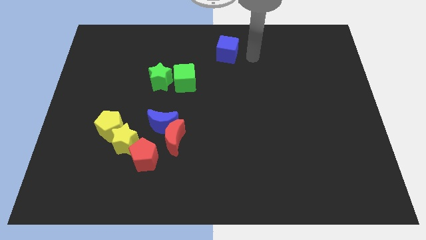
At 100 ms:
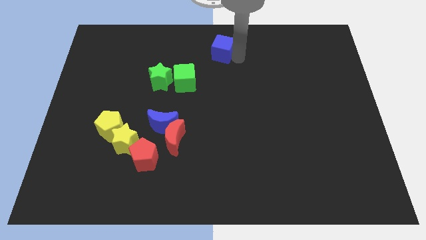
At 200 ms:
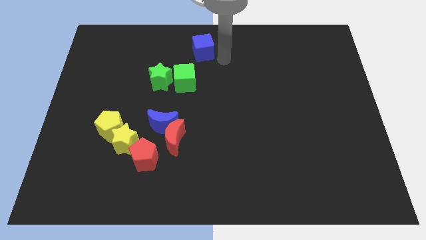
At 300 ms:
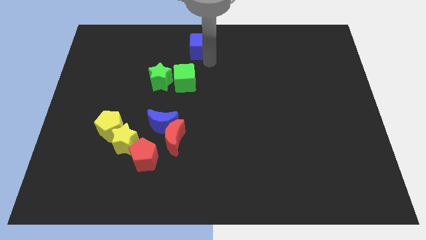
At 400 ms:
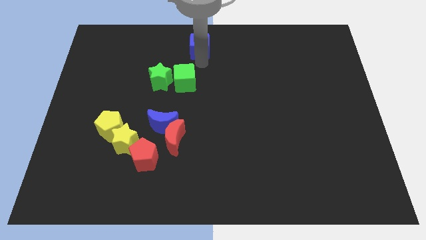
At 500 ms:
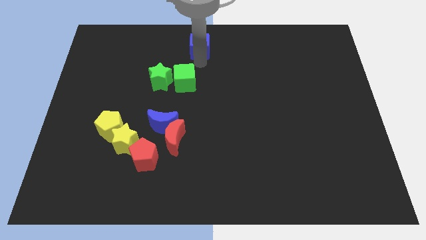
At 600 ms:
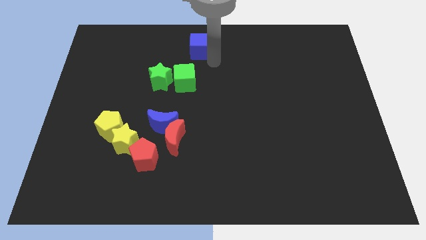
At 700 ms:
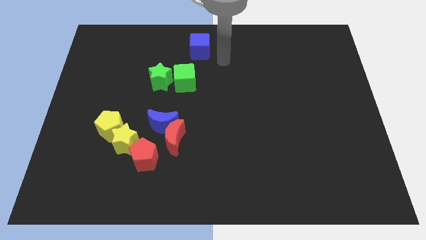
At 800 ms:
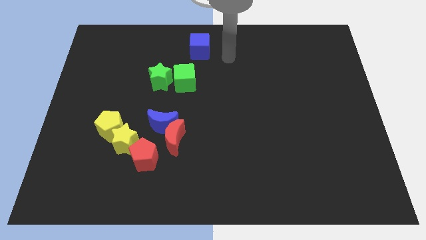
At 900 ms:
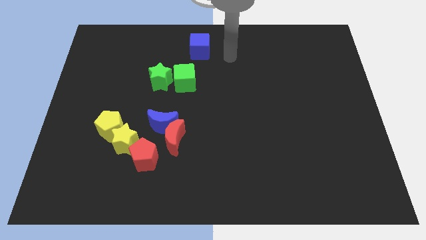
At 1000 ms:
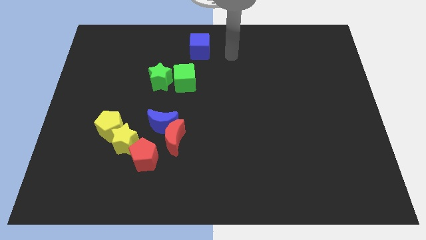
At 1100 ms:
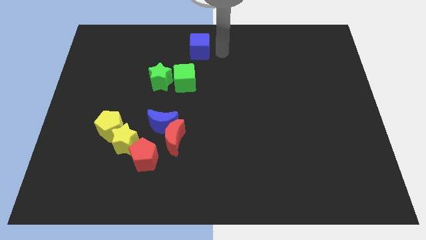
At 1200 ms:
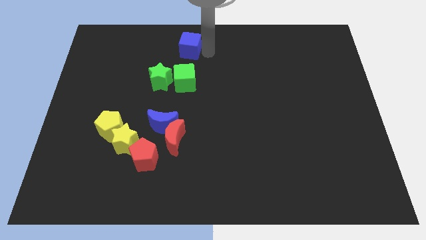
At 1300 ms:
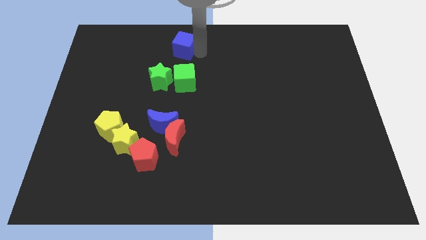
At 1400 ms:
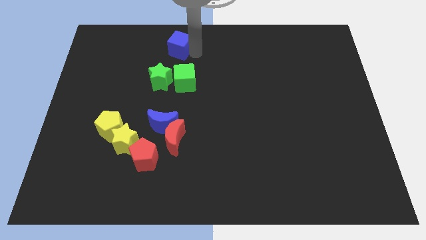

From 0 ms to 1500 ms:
put the blue cube above the green cube

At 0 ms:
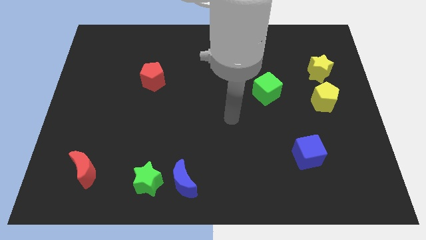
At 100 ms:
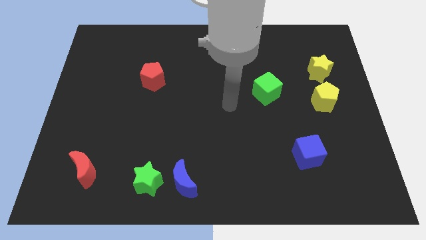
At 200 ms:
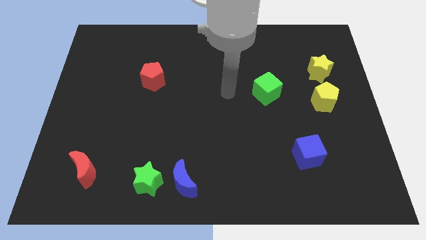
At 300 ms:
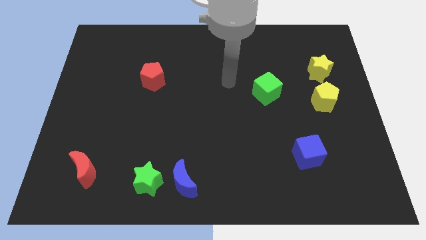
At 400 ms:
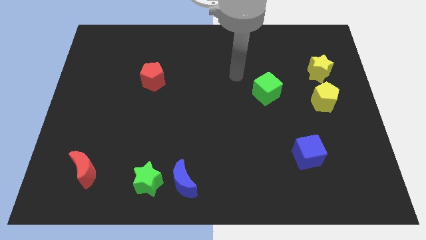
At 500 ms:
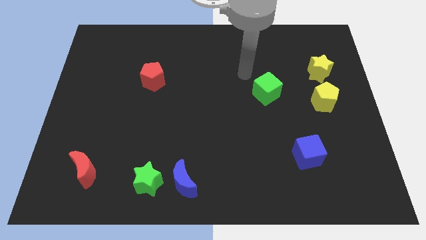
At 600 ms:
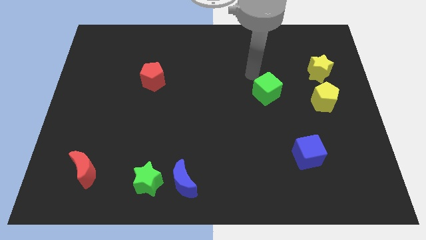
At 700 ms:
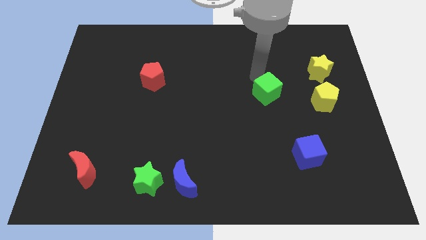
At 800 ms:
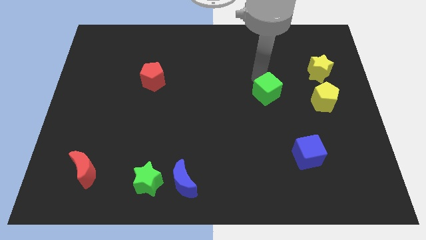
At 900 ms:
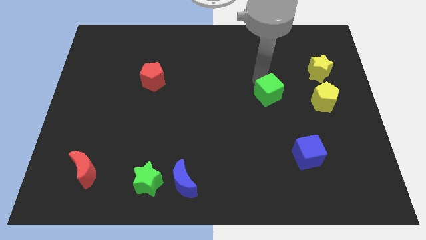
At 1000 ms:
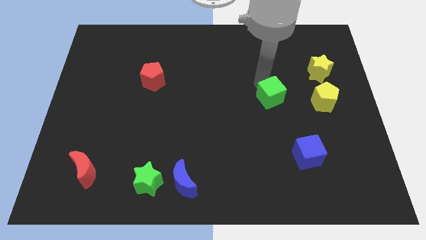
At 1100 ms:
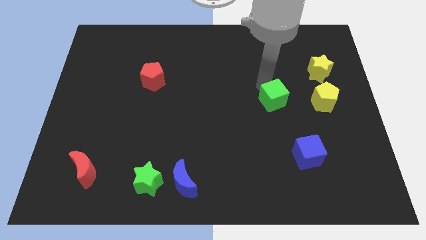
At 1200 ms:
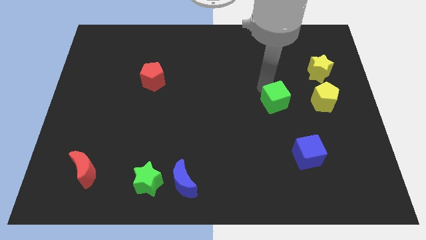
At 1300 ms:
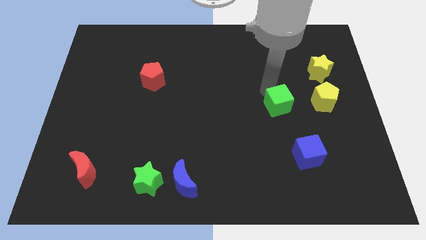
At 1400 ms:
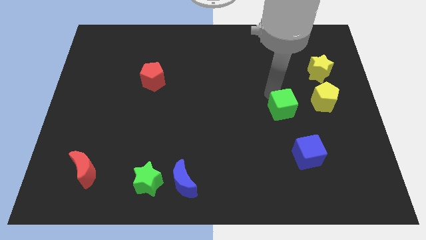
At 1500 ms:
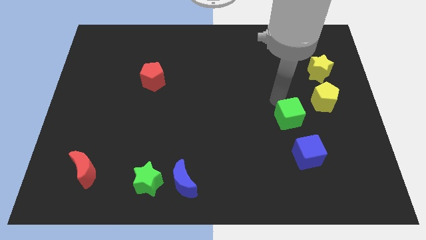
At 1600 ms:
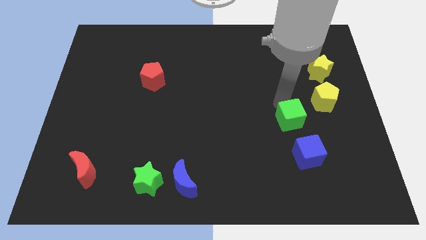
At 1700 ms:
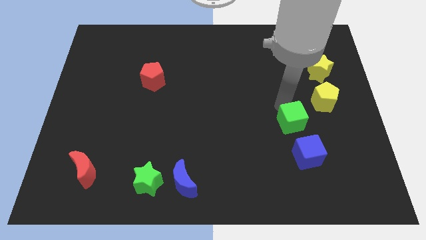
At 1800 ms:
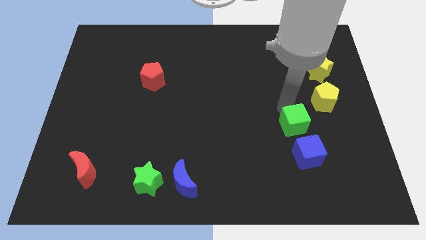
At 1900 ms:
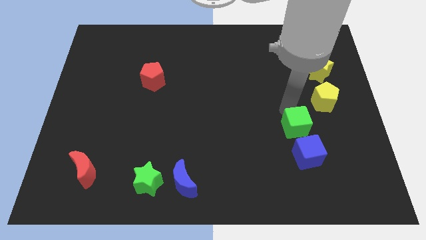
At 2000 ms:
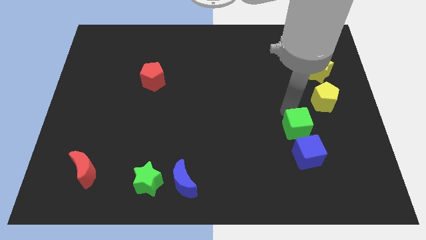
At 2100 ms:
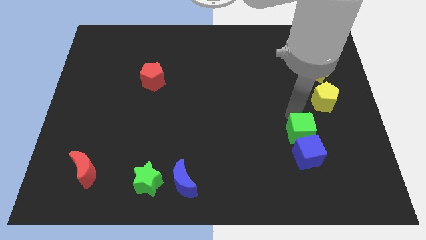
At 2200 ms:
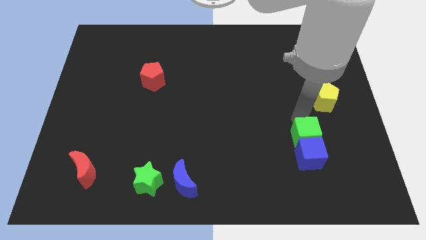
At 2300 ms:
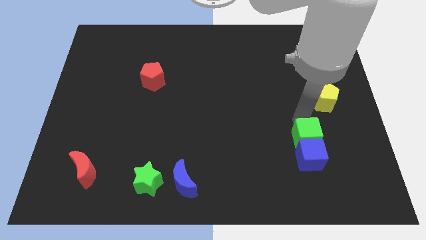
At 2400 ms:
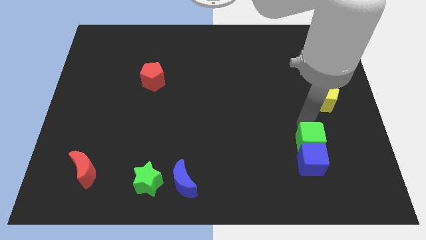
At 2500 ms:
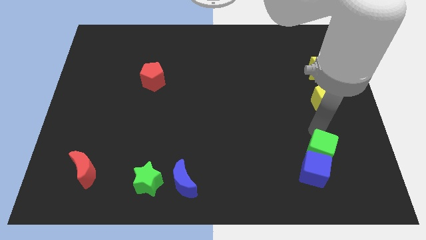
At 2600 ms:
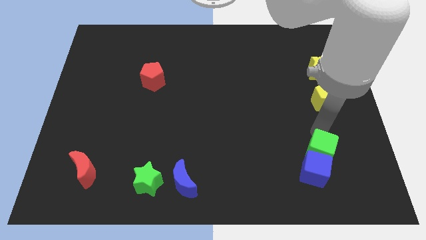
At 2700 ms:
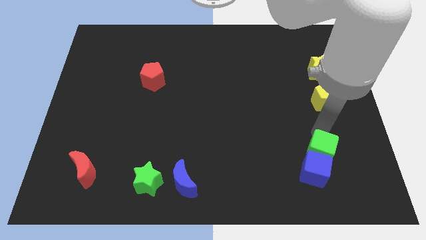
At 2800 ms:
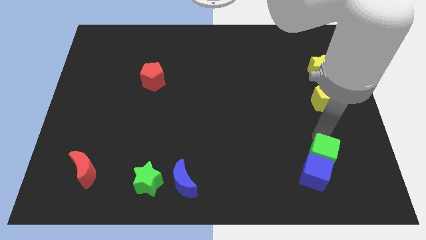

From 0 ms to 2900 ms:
push the green cube into the blue cube

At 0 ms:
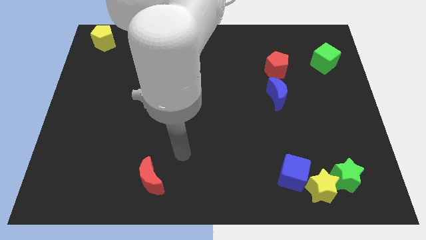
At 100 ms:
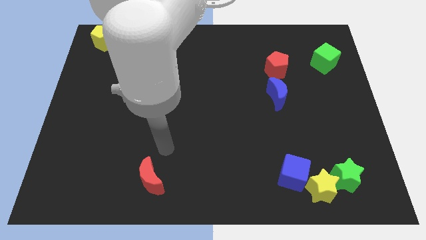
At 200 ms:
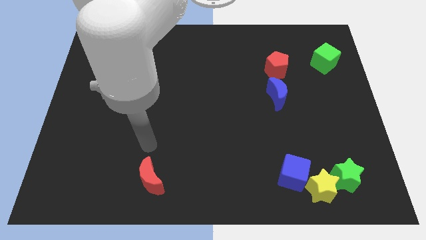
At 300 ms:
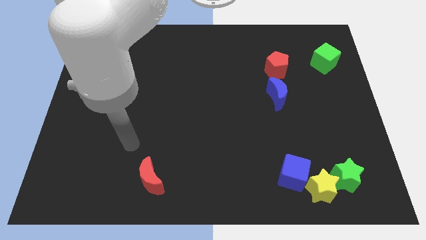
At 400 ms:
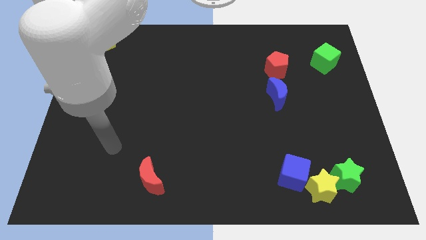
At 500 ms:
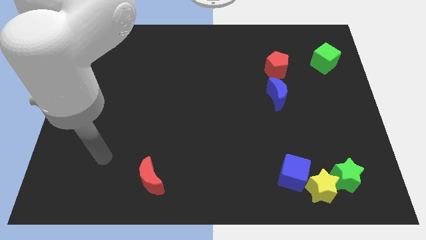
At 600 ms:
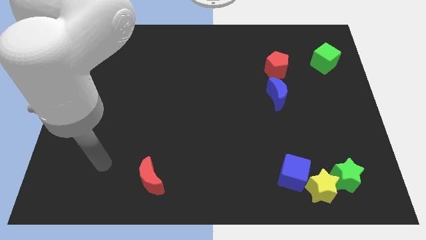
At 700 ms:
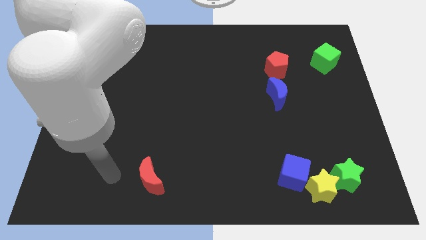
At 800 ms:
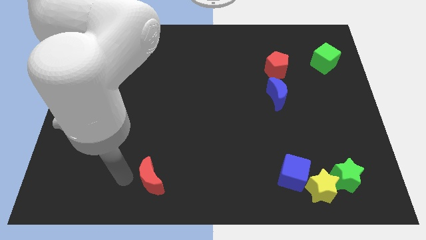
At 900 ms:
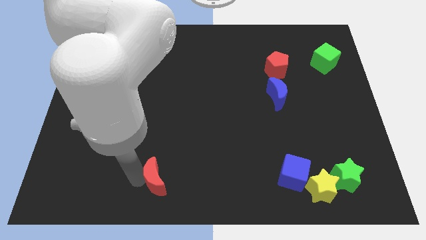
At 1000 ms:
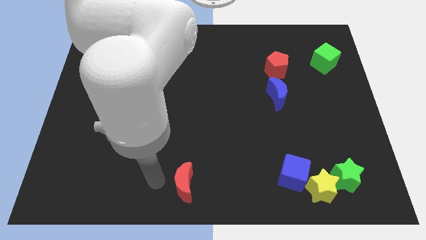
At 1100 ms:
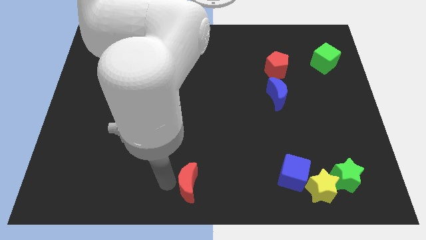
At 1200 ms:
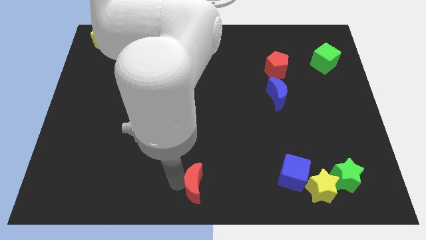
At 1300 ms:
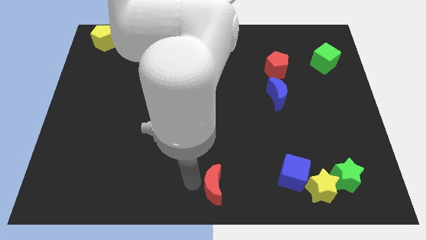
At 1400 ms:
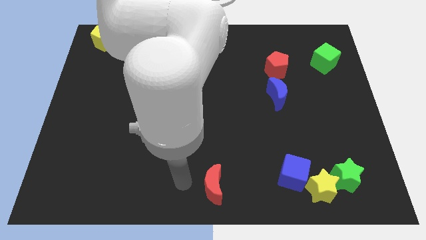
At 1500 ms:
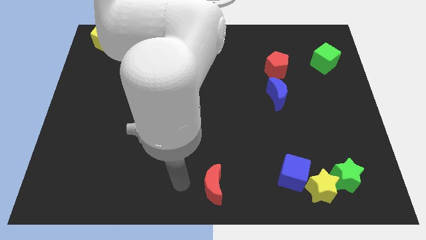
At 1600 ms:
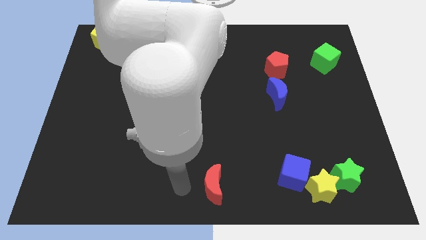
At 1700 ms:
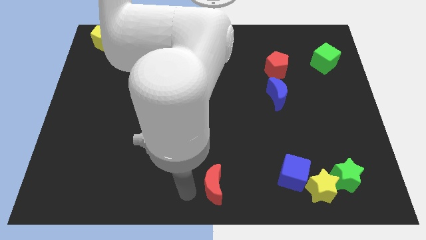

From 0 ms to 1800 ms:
slide the red moon to the bottom center of the board

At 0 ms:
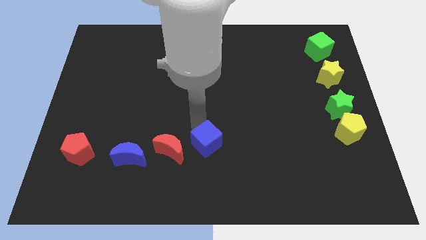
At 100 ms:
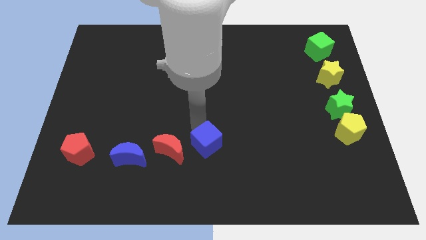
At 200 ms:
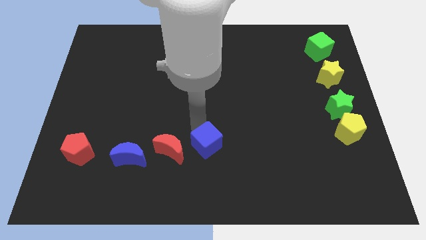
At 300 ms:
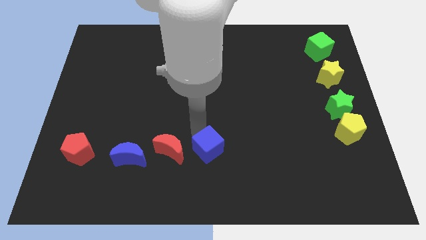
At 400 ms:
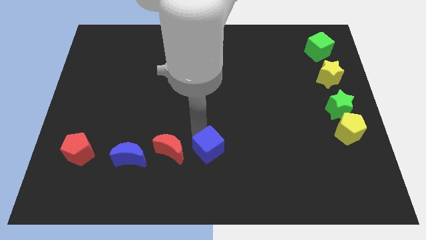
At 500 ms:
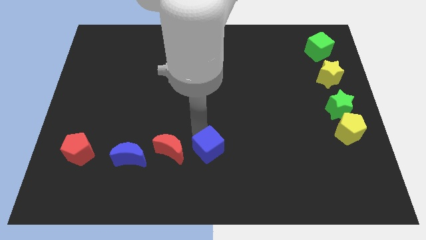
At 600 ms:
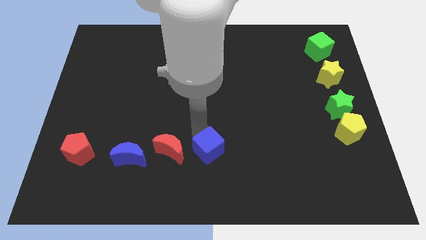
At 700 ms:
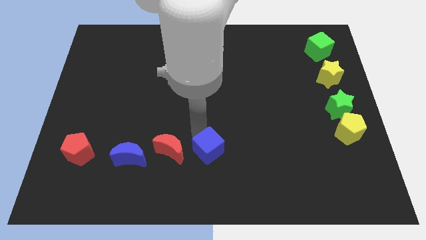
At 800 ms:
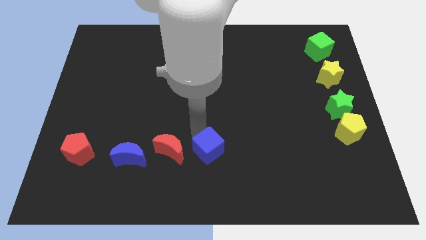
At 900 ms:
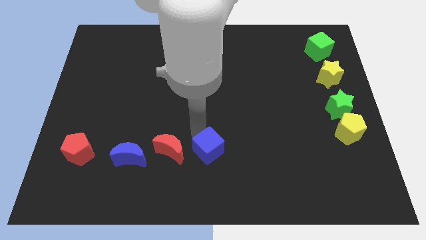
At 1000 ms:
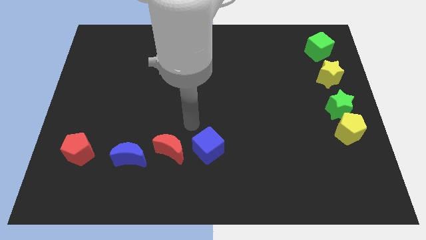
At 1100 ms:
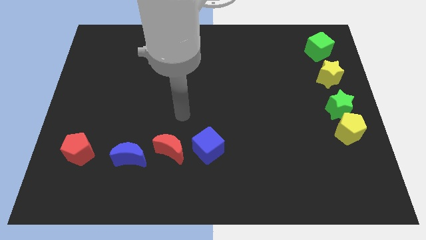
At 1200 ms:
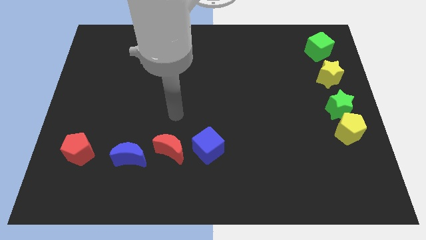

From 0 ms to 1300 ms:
move the blue cube to the right of the red crescent

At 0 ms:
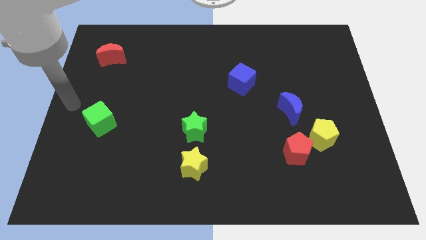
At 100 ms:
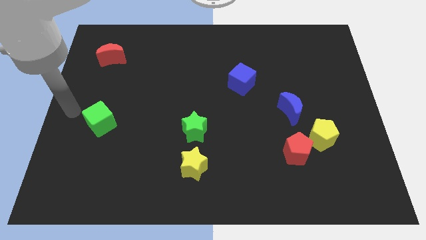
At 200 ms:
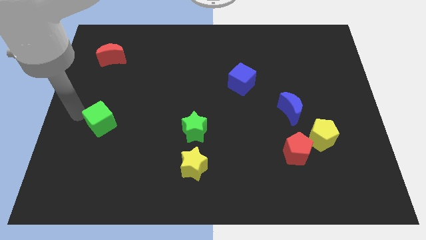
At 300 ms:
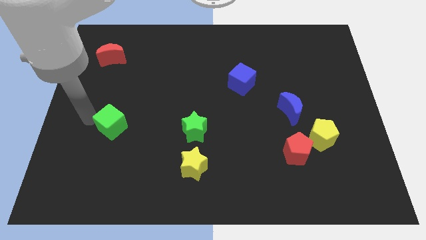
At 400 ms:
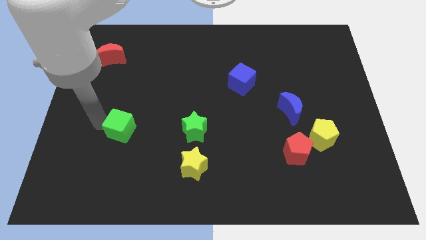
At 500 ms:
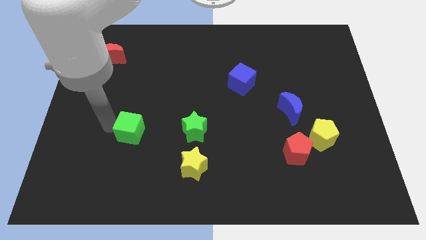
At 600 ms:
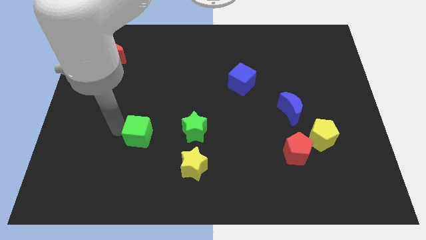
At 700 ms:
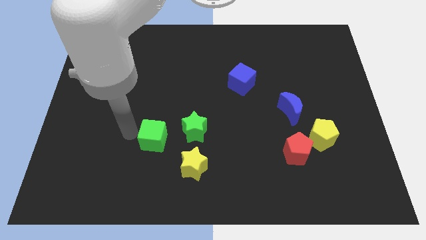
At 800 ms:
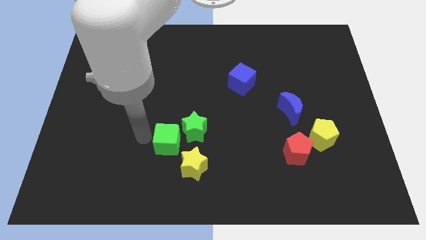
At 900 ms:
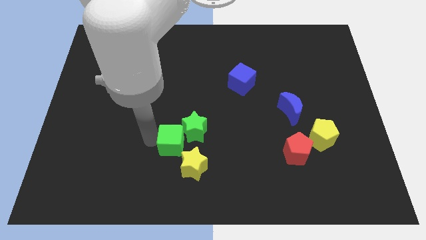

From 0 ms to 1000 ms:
place green cube to the bottom left of green star

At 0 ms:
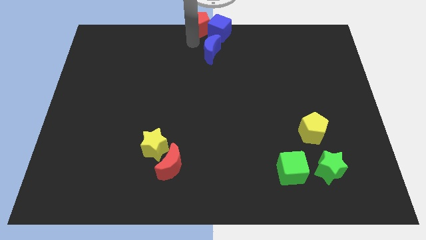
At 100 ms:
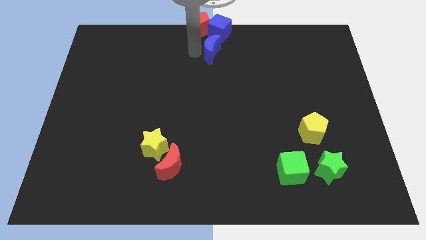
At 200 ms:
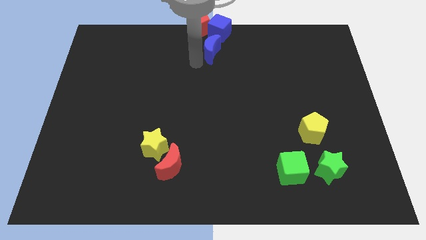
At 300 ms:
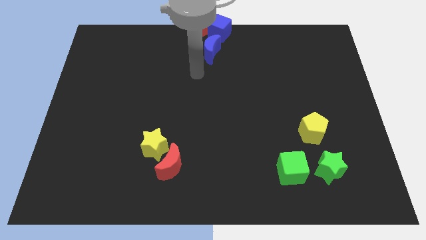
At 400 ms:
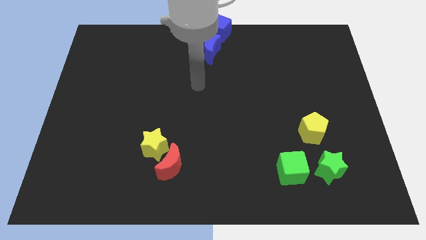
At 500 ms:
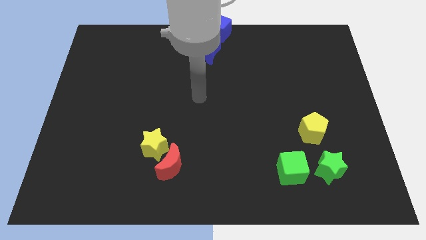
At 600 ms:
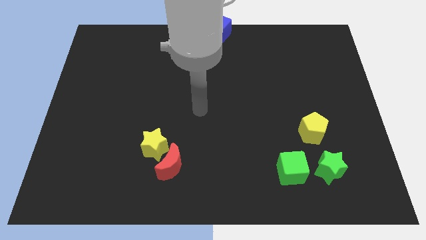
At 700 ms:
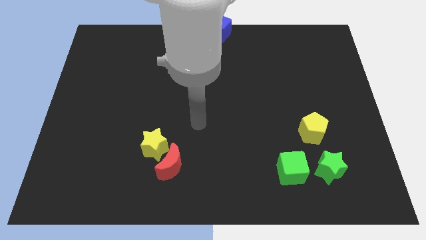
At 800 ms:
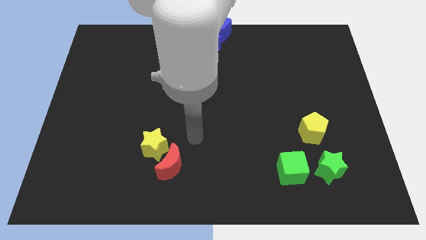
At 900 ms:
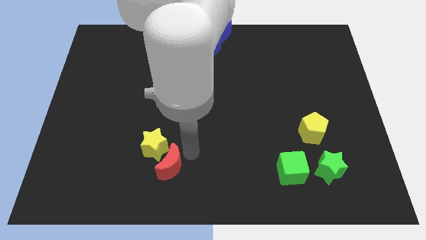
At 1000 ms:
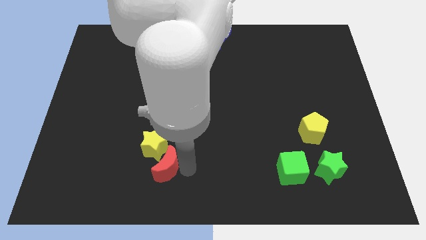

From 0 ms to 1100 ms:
point your arm at the right of the red crescent
